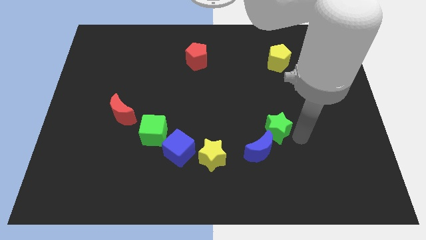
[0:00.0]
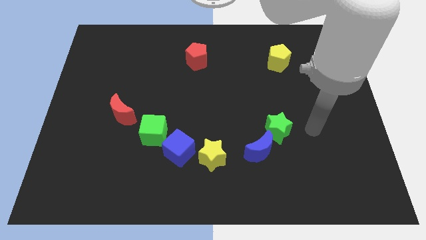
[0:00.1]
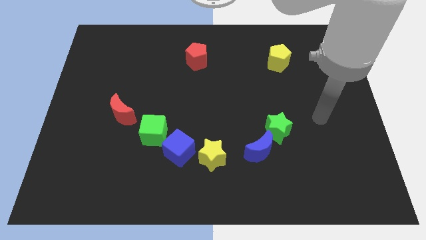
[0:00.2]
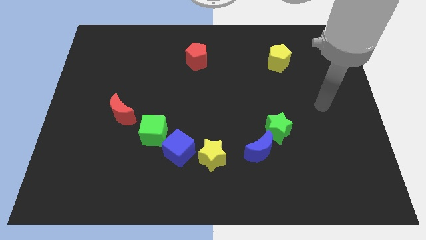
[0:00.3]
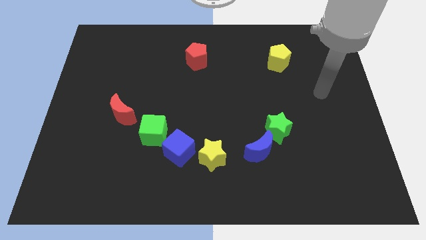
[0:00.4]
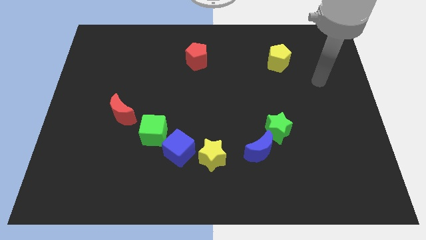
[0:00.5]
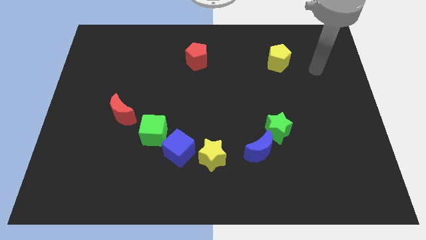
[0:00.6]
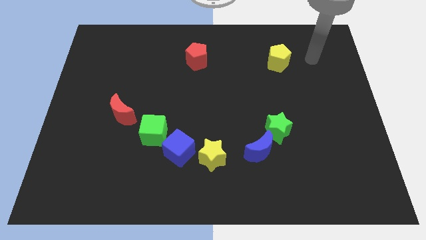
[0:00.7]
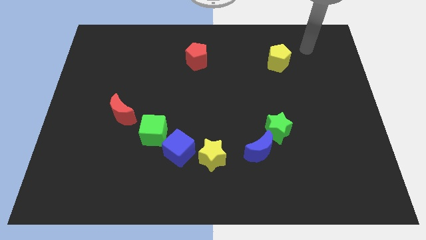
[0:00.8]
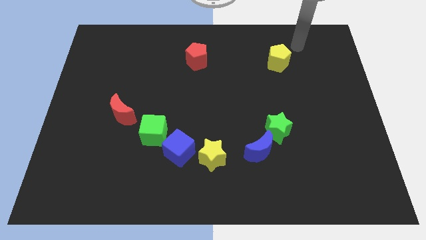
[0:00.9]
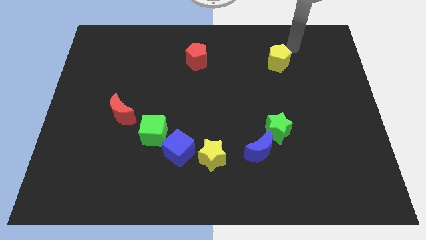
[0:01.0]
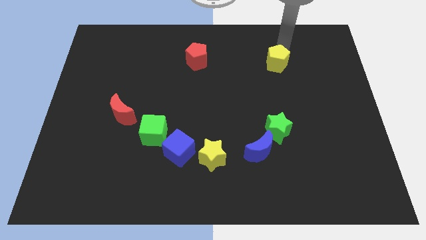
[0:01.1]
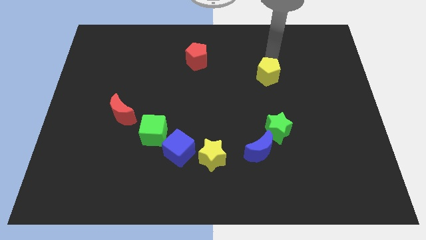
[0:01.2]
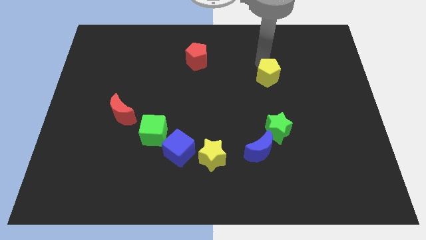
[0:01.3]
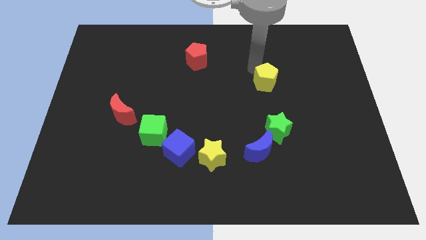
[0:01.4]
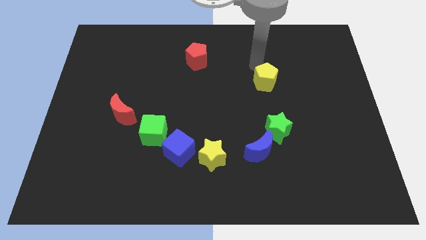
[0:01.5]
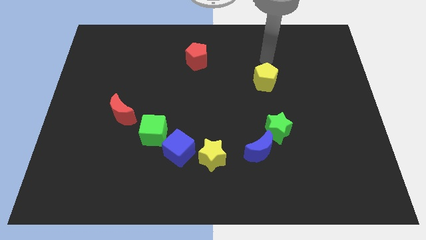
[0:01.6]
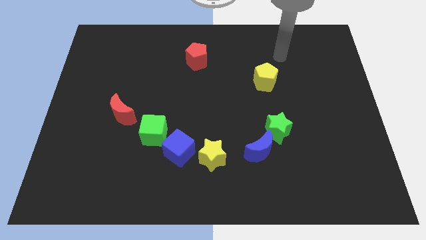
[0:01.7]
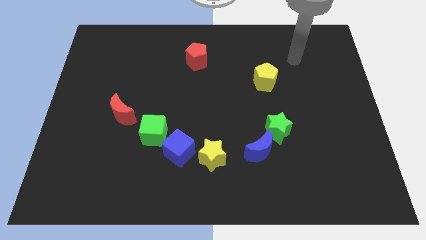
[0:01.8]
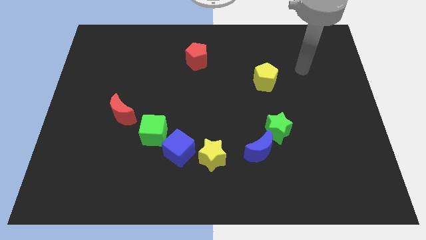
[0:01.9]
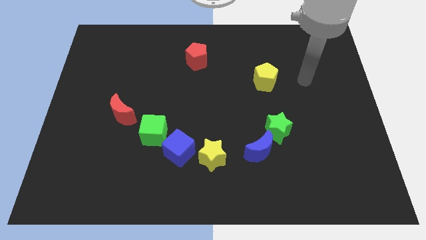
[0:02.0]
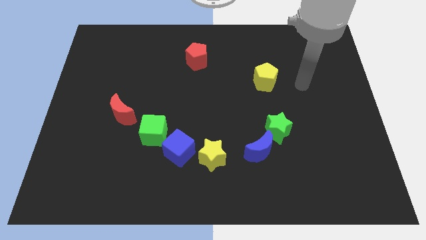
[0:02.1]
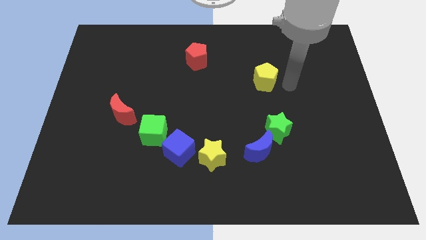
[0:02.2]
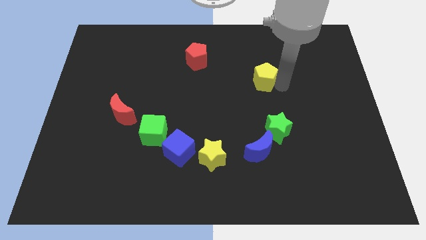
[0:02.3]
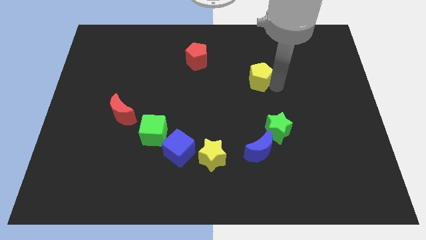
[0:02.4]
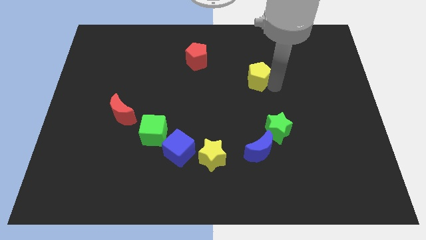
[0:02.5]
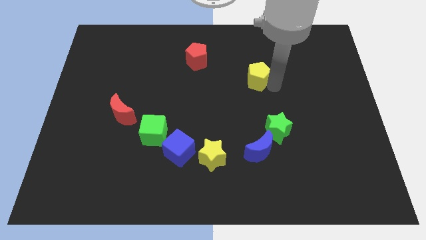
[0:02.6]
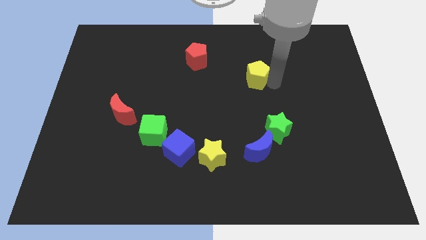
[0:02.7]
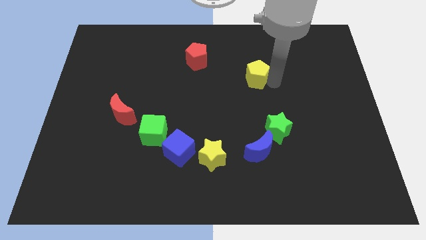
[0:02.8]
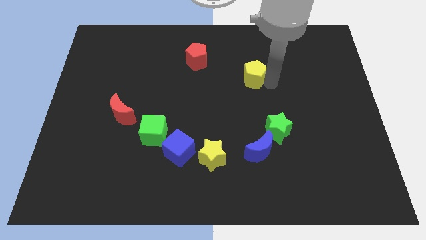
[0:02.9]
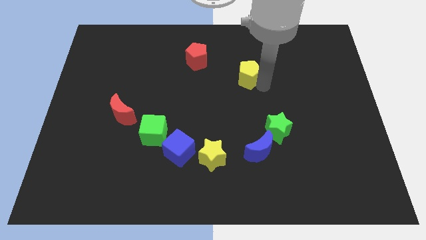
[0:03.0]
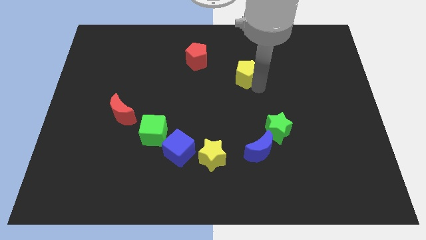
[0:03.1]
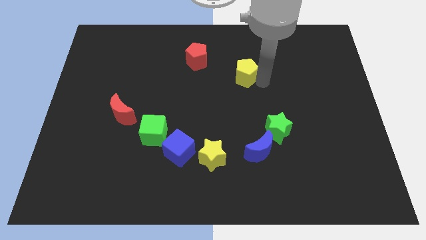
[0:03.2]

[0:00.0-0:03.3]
move the yellow pentagon towards the right side of the red pentagon

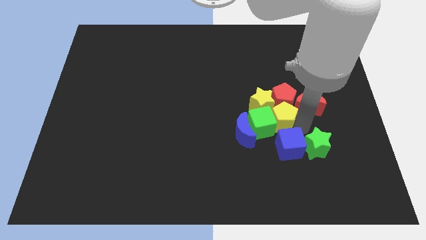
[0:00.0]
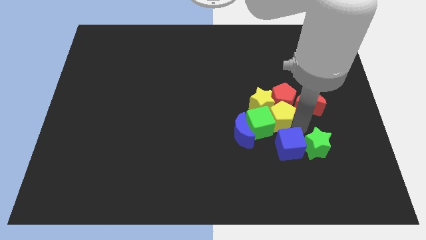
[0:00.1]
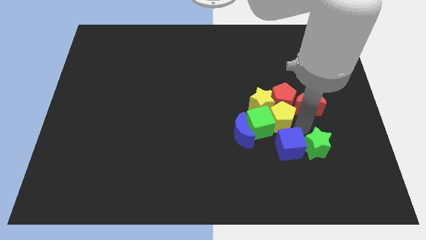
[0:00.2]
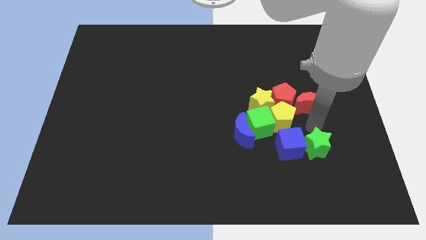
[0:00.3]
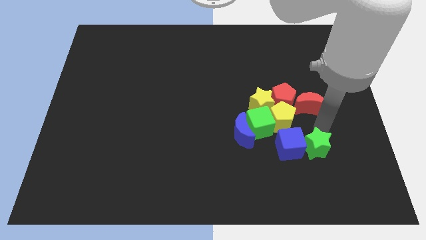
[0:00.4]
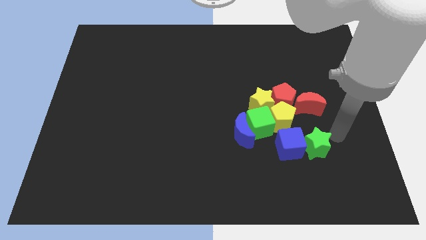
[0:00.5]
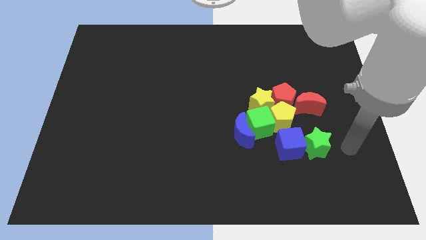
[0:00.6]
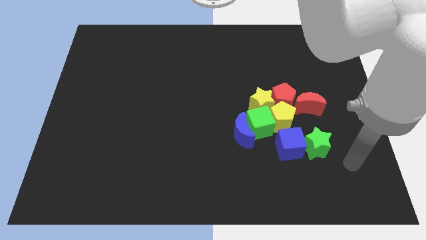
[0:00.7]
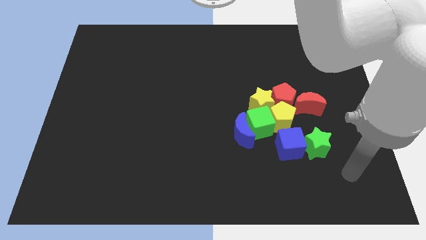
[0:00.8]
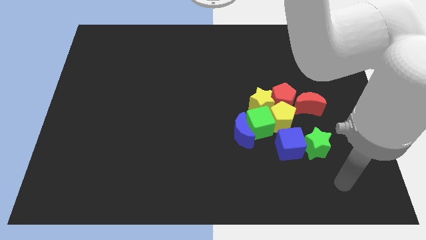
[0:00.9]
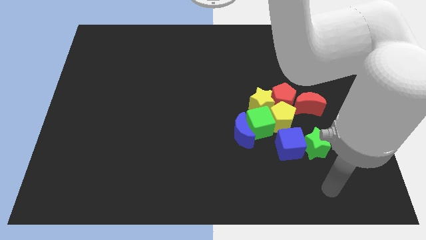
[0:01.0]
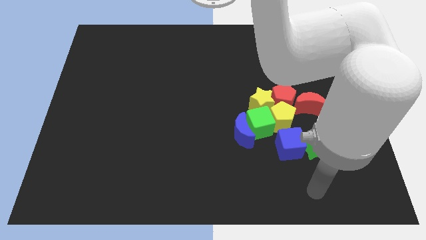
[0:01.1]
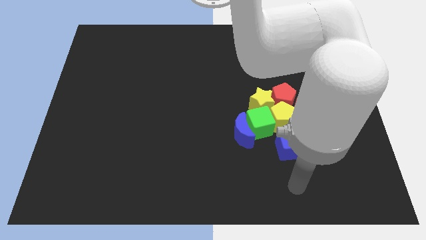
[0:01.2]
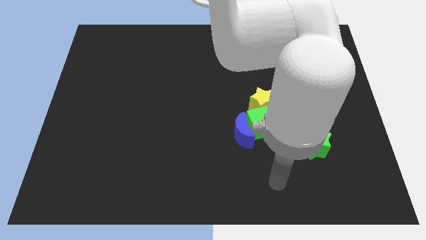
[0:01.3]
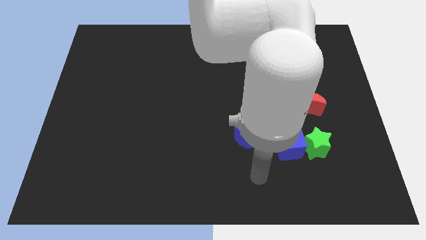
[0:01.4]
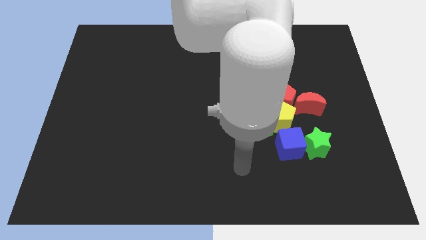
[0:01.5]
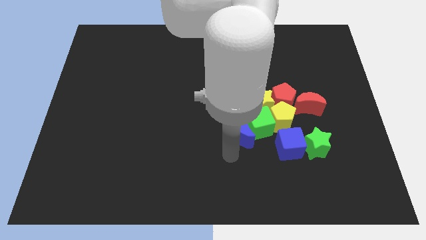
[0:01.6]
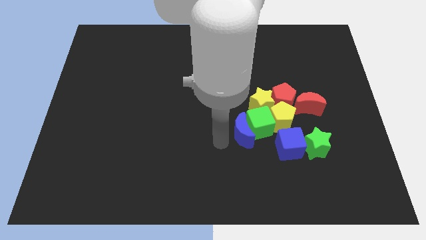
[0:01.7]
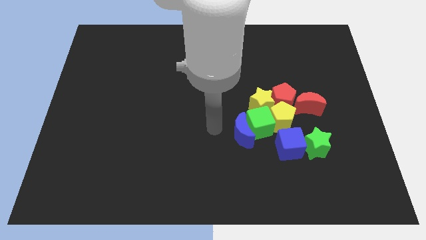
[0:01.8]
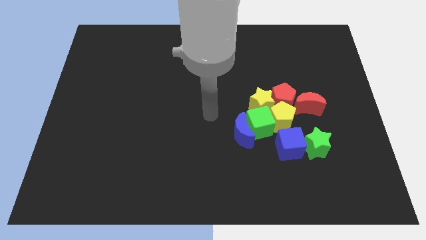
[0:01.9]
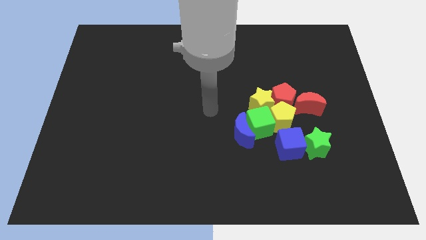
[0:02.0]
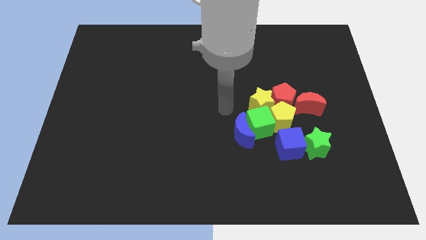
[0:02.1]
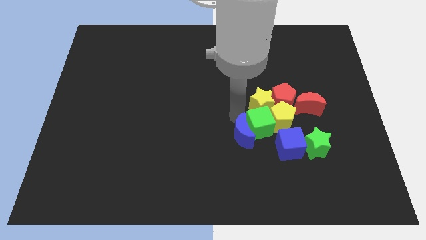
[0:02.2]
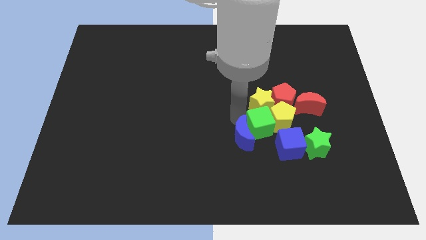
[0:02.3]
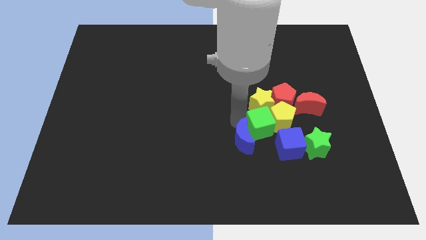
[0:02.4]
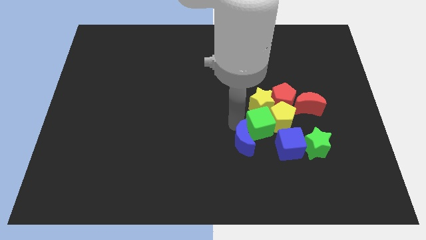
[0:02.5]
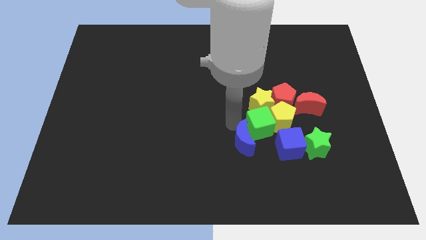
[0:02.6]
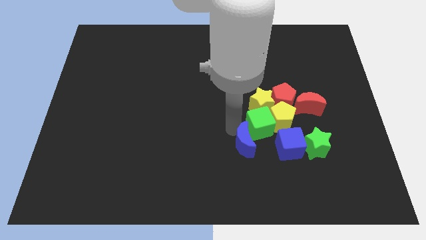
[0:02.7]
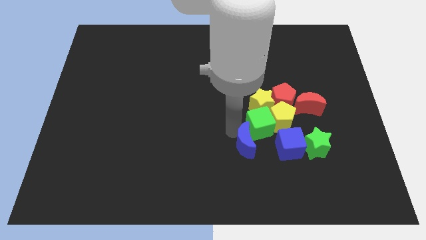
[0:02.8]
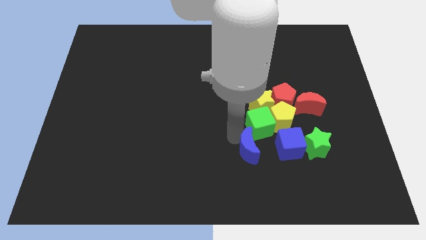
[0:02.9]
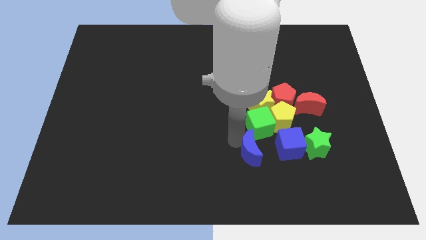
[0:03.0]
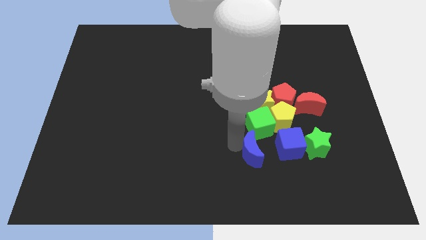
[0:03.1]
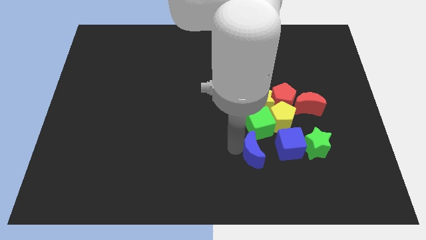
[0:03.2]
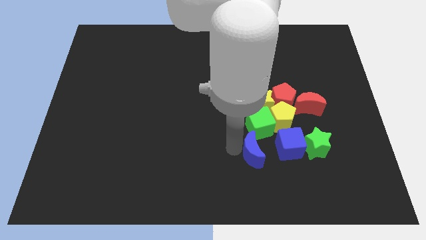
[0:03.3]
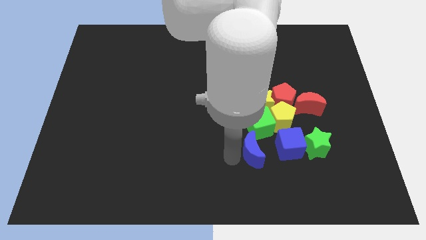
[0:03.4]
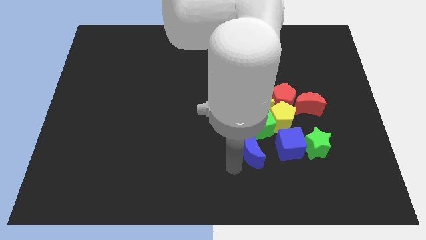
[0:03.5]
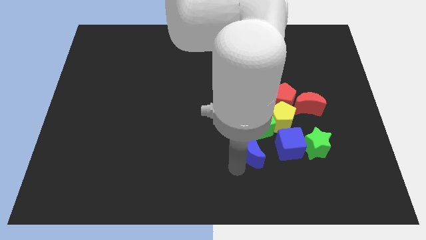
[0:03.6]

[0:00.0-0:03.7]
place the blue moon to the left of the blue cube

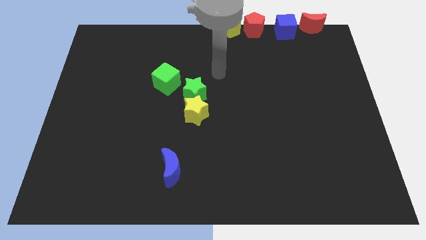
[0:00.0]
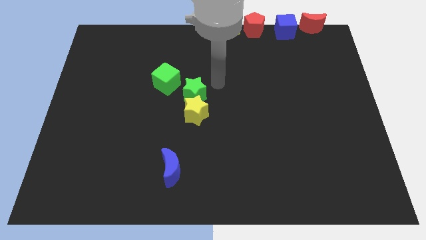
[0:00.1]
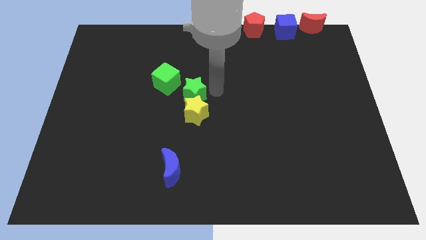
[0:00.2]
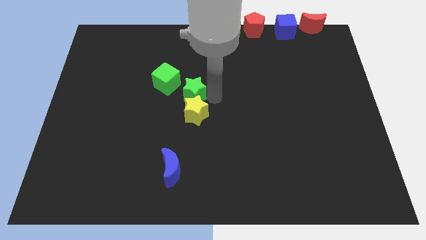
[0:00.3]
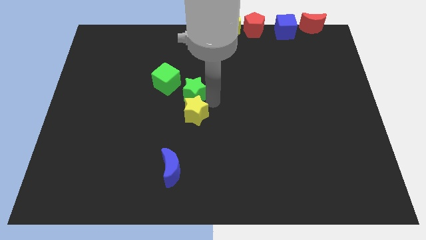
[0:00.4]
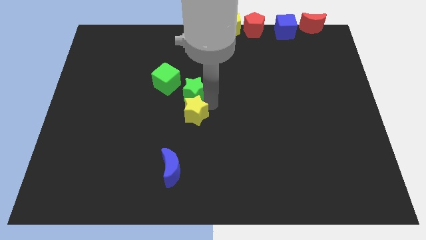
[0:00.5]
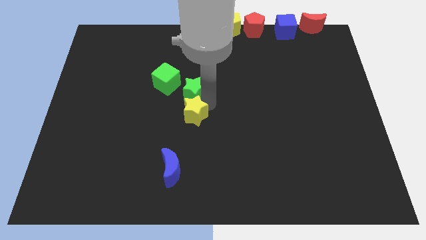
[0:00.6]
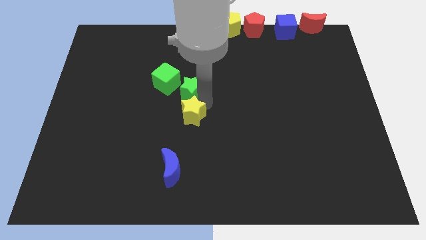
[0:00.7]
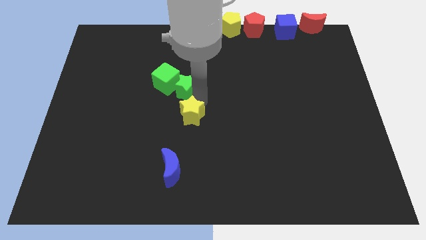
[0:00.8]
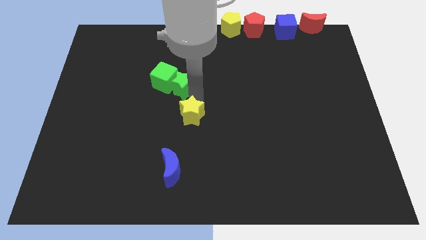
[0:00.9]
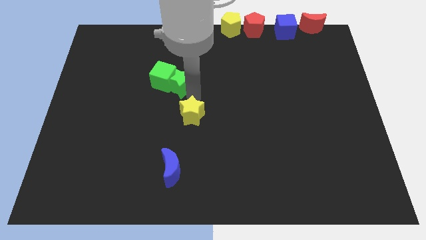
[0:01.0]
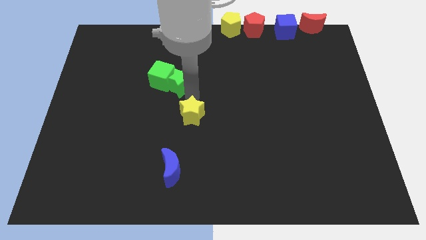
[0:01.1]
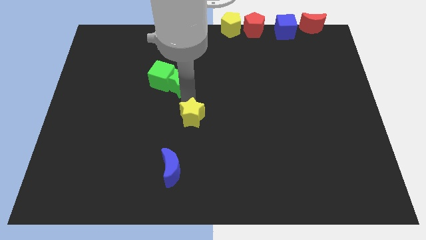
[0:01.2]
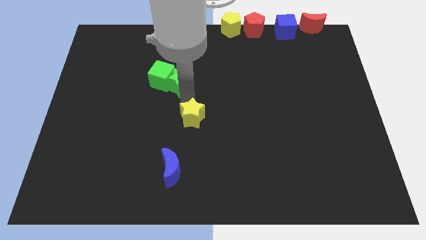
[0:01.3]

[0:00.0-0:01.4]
push green star into the green cube

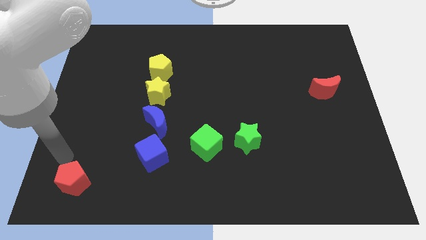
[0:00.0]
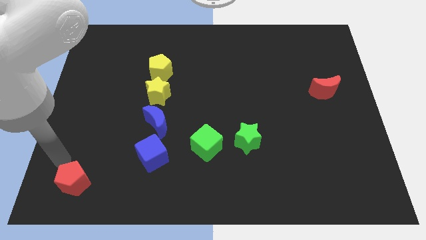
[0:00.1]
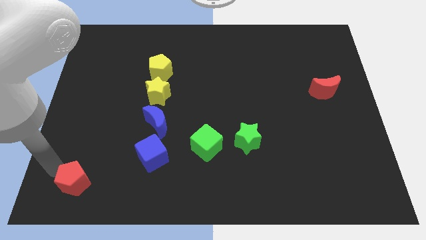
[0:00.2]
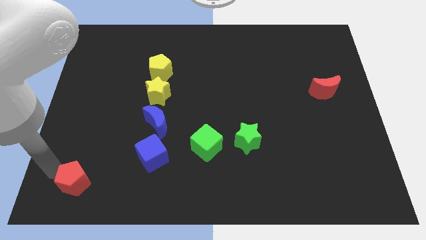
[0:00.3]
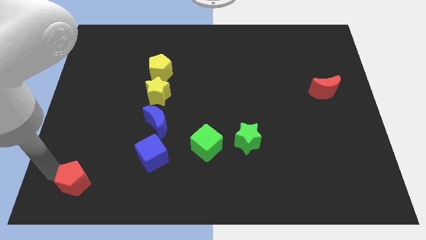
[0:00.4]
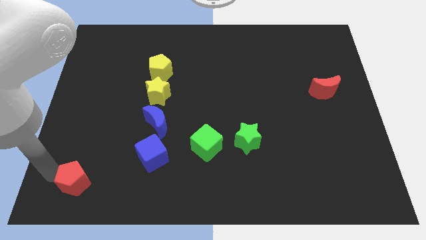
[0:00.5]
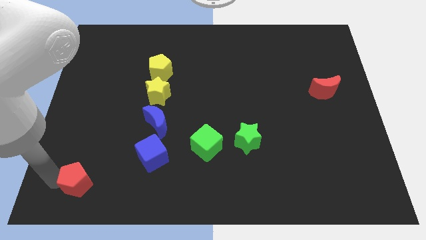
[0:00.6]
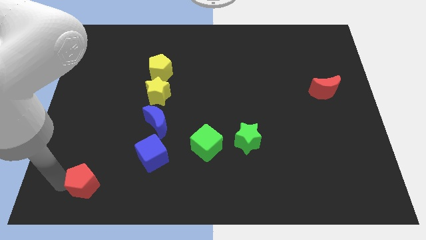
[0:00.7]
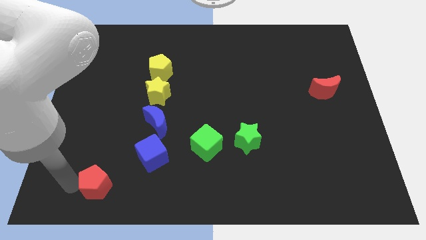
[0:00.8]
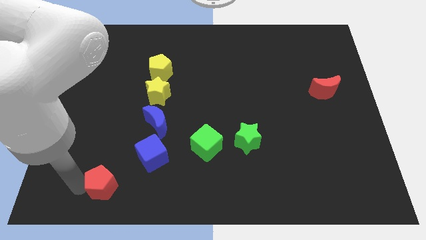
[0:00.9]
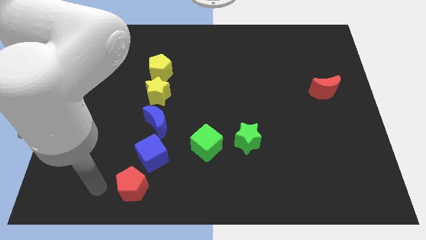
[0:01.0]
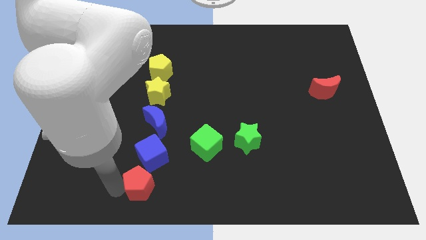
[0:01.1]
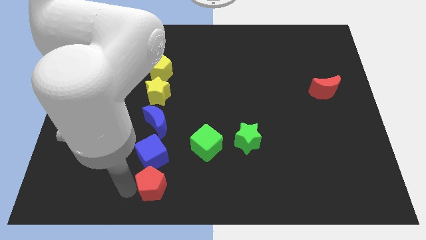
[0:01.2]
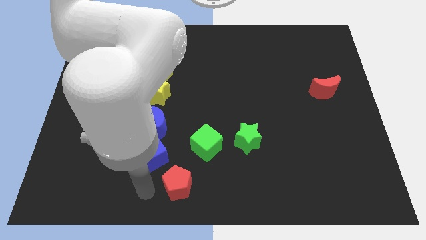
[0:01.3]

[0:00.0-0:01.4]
move the red penatgon parallel to the green cube
